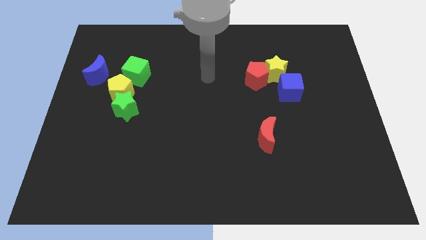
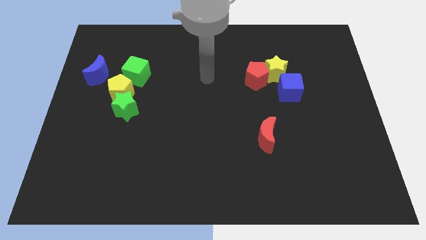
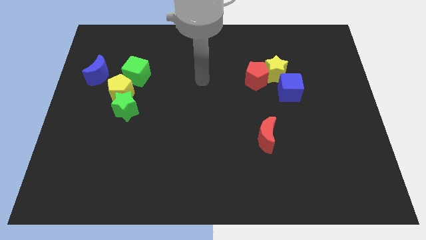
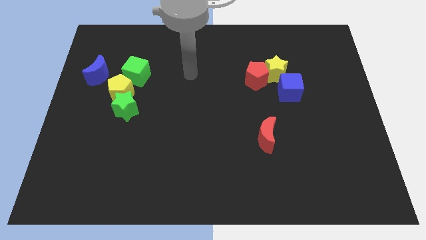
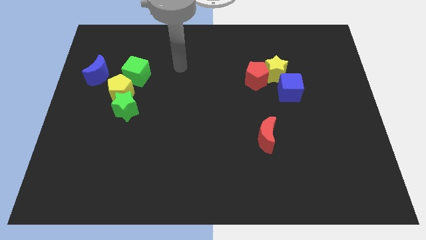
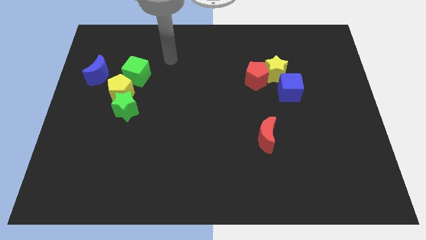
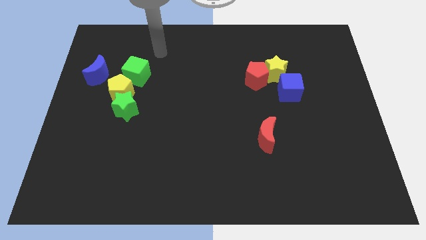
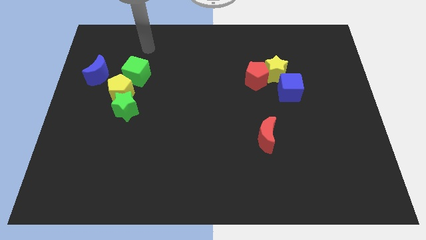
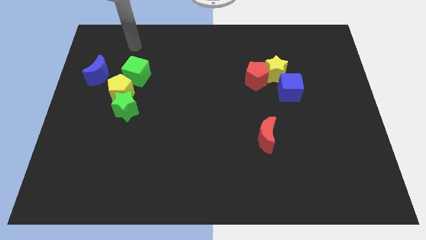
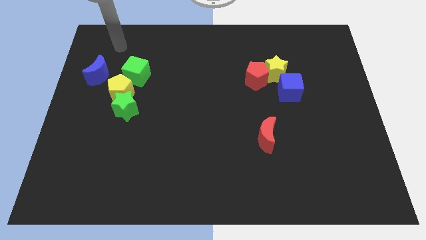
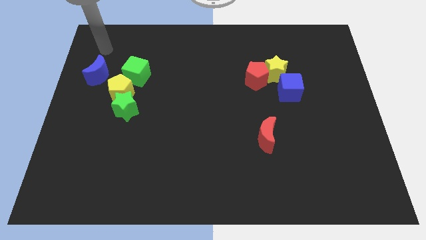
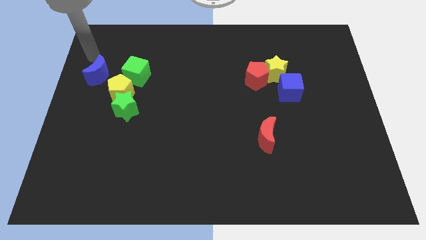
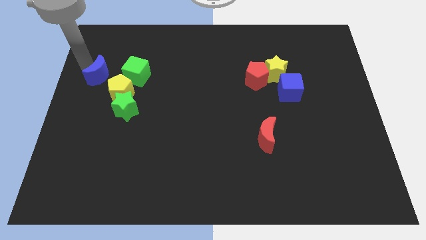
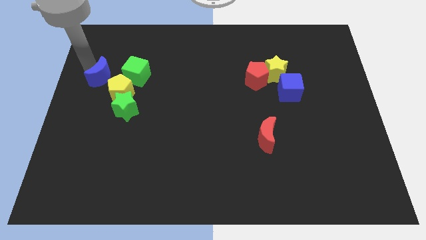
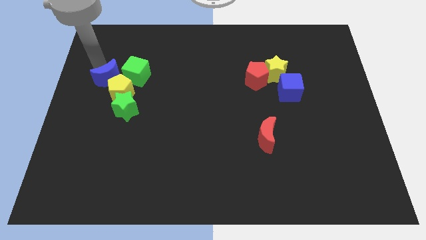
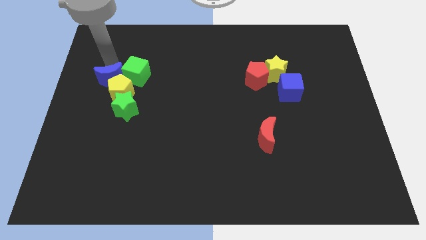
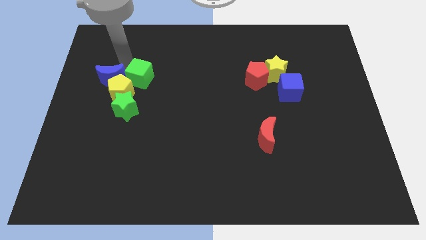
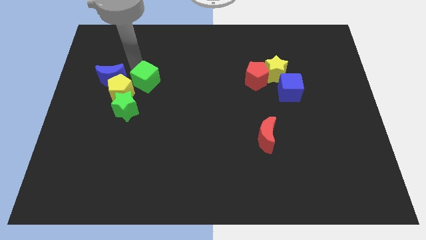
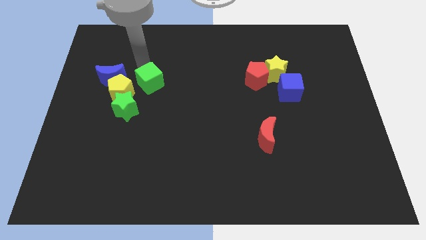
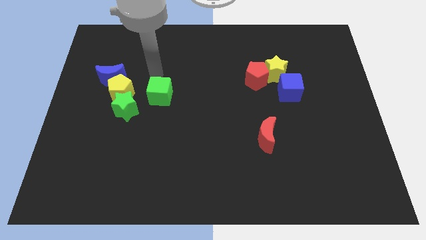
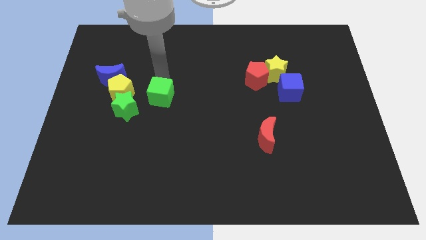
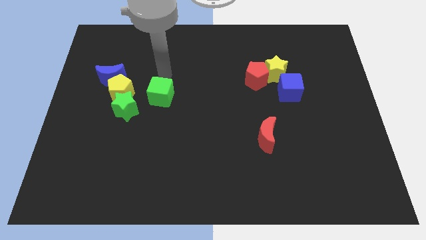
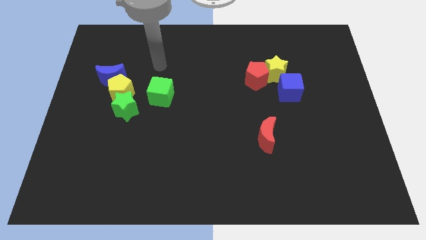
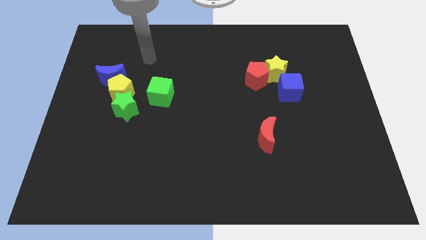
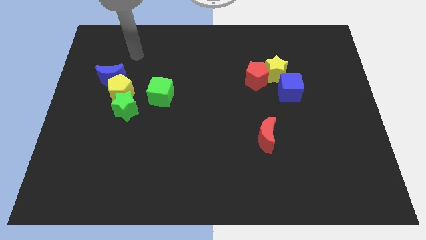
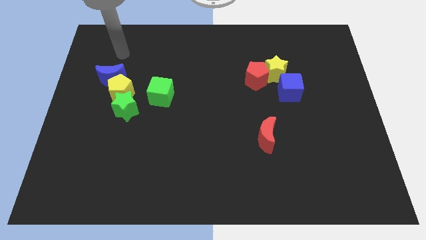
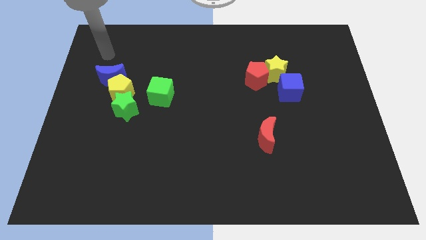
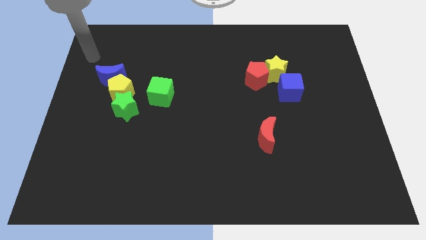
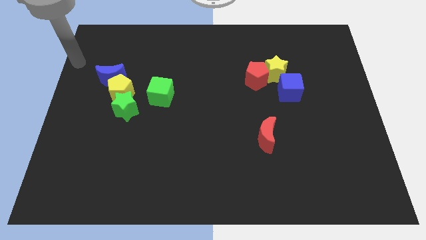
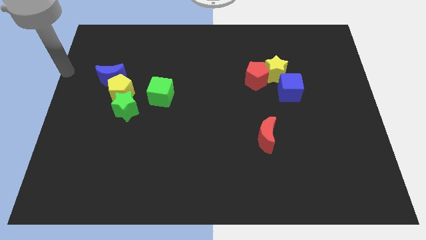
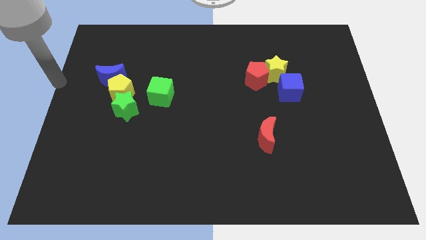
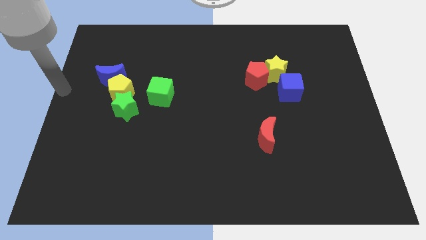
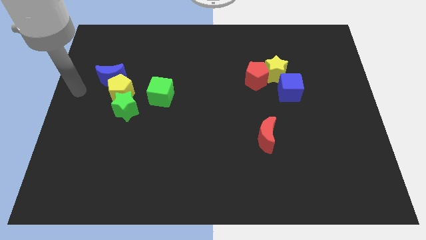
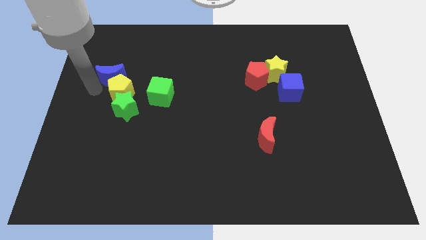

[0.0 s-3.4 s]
place the green cube to the right of the yellow pentagon

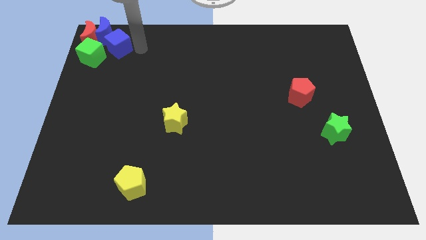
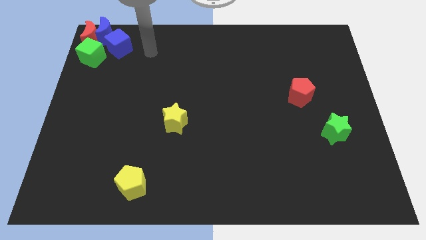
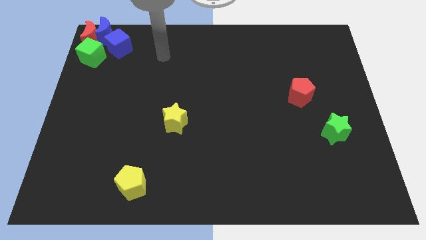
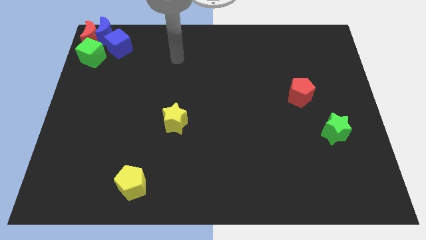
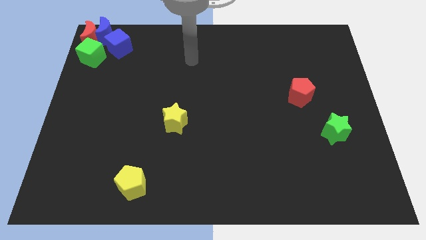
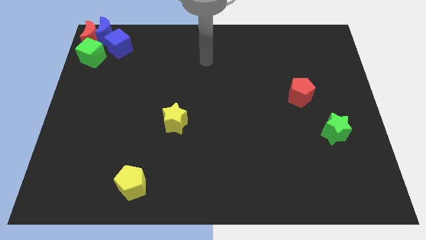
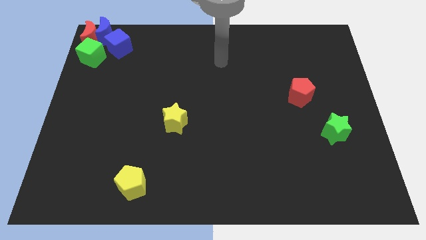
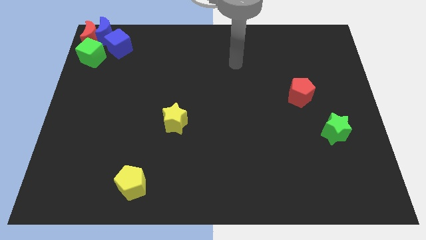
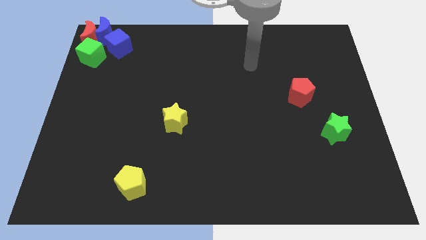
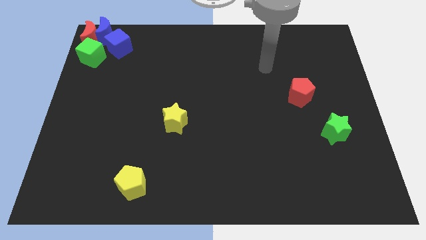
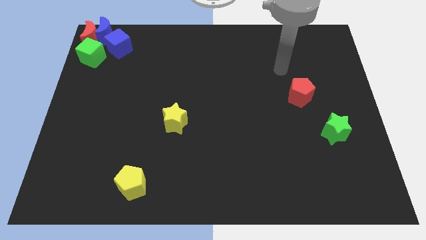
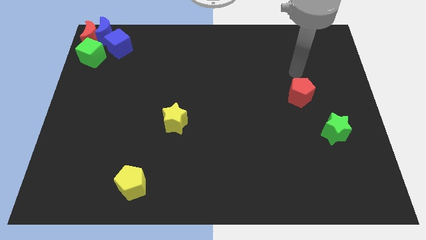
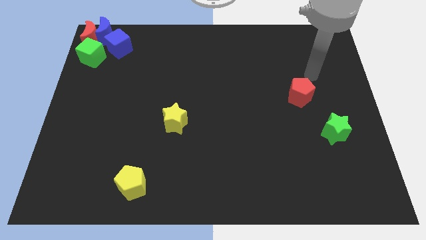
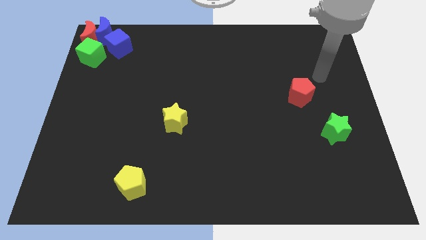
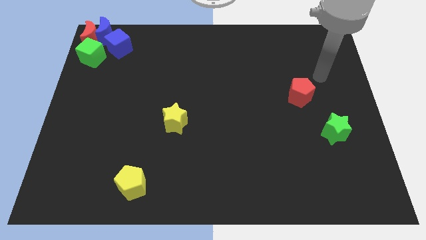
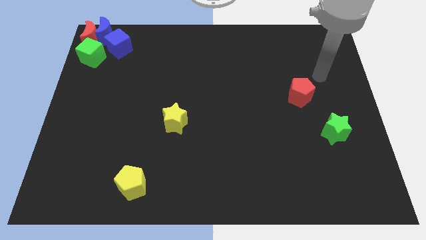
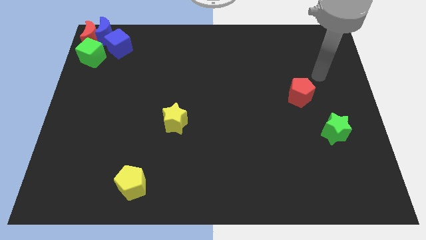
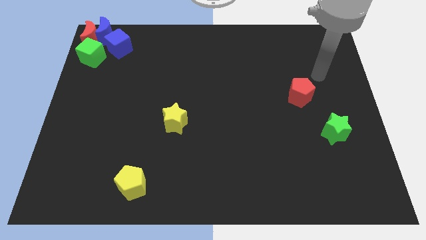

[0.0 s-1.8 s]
move your arm away from the blue cube

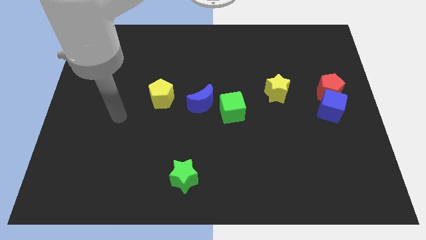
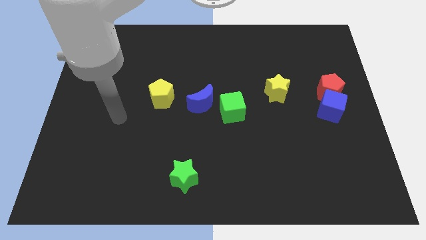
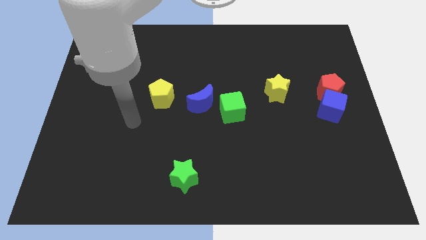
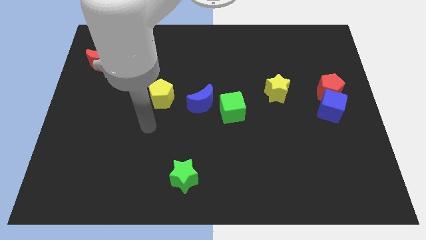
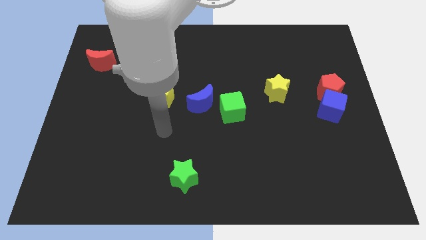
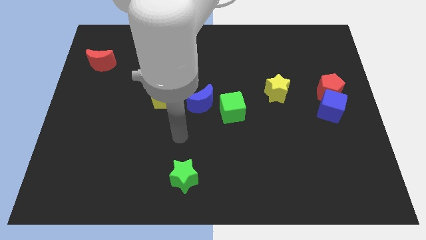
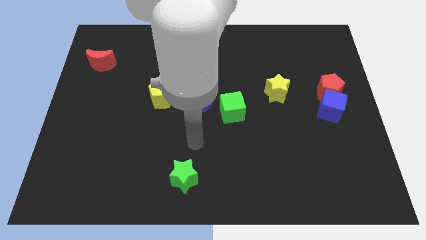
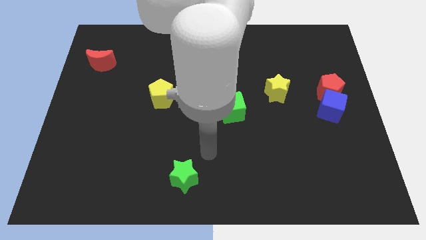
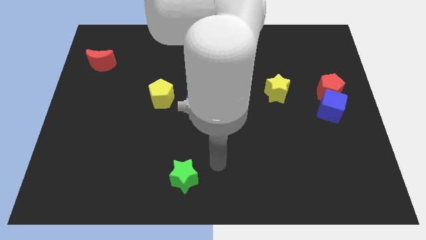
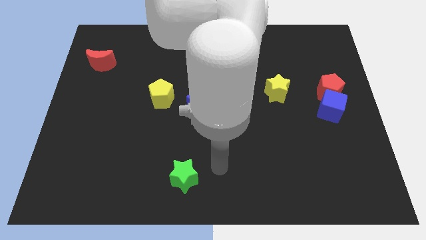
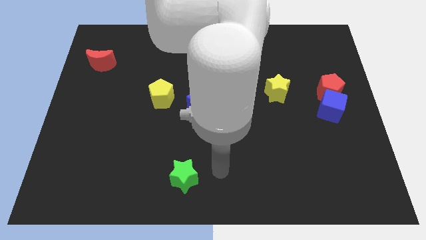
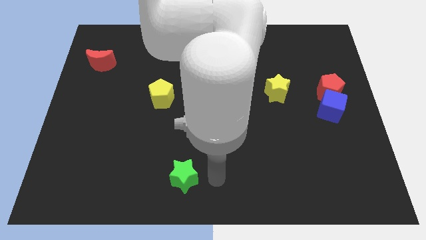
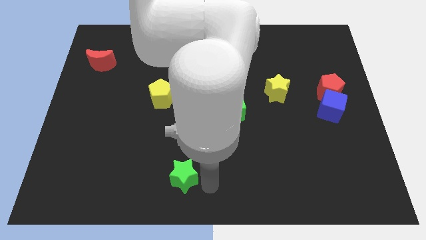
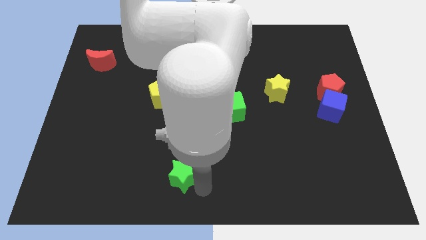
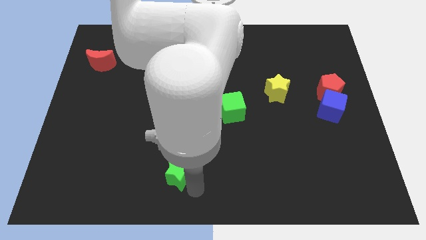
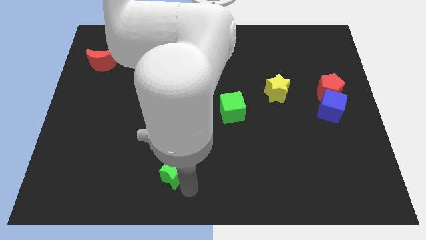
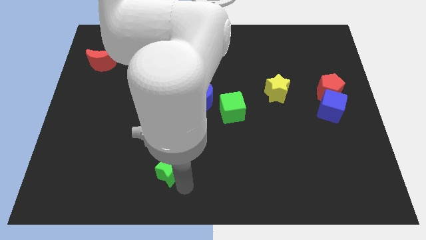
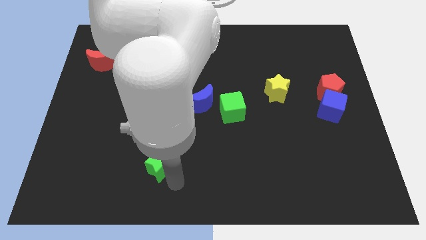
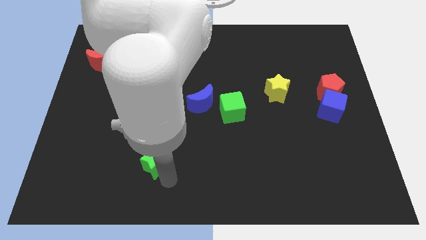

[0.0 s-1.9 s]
move the green star to the left of the board

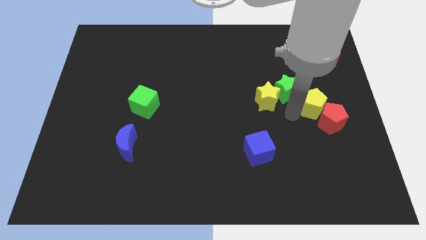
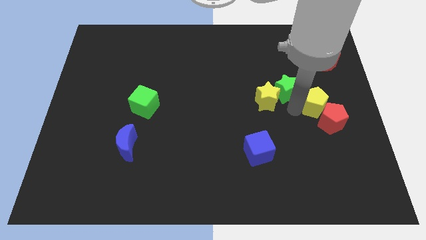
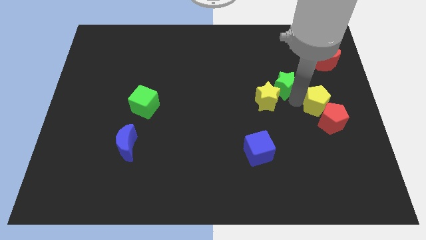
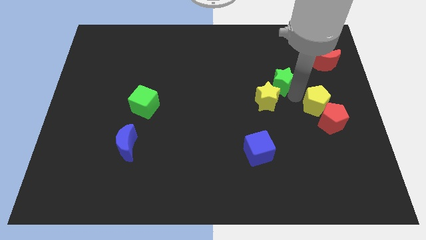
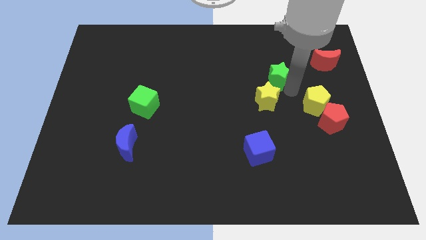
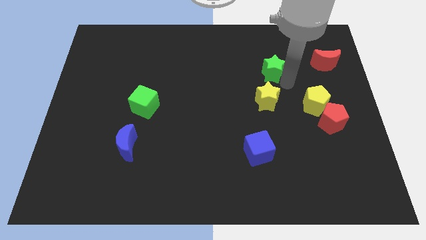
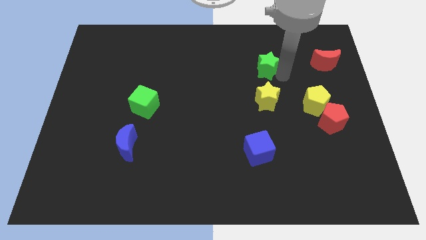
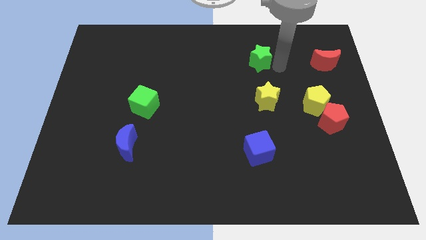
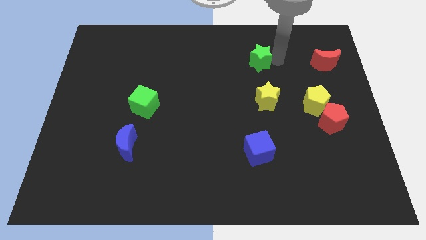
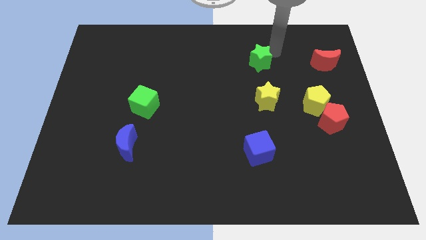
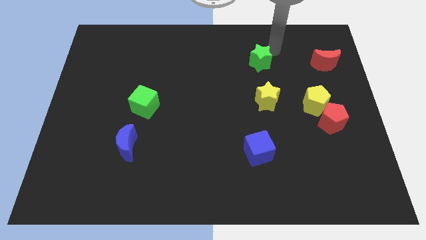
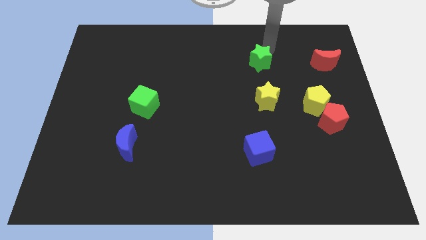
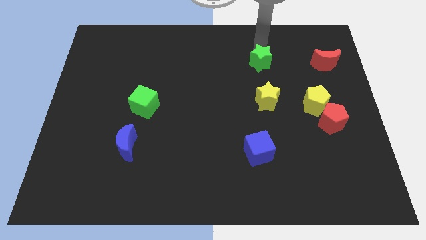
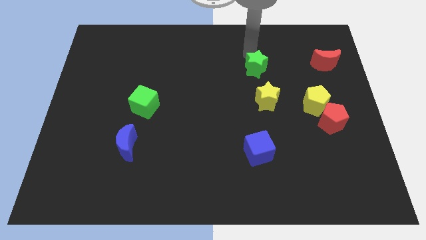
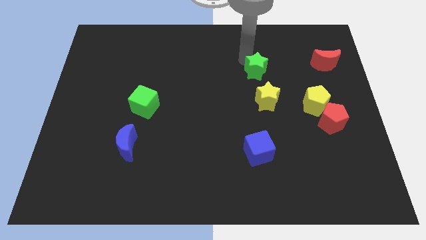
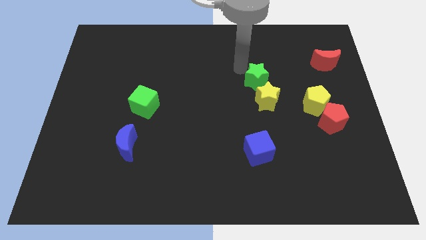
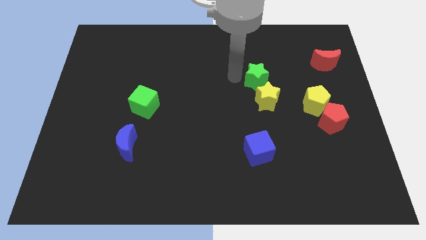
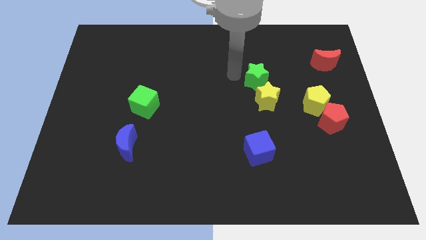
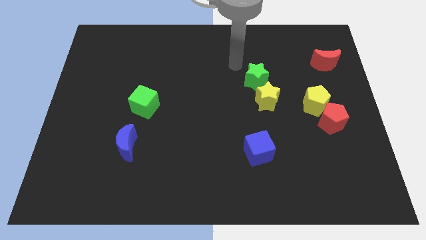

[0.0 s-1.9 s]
push the green star close to the yellow star
